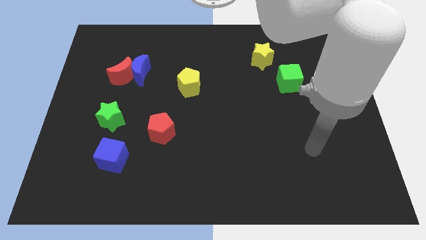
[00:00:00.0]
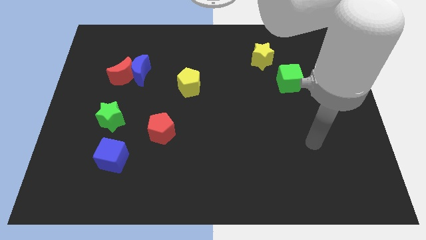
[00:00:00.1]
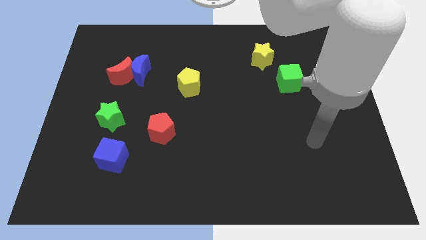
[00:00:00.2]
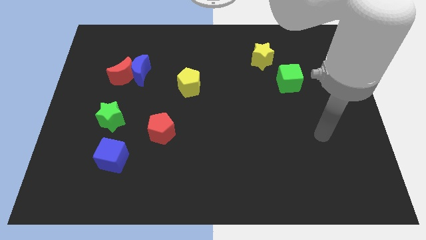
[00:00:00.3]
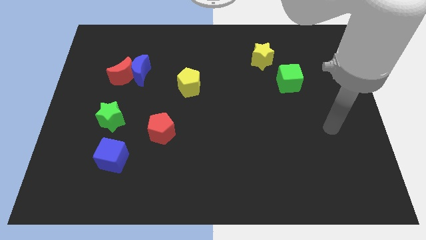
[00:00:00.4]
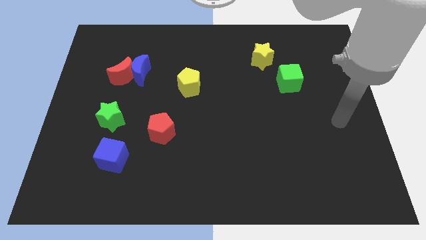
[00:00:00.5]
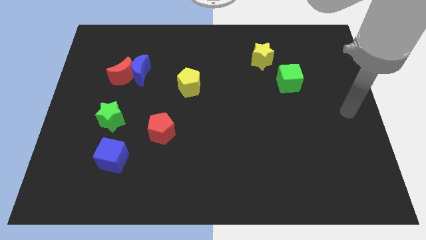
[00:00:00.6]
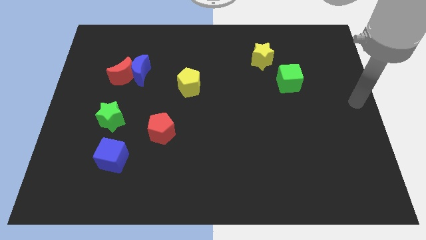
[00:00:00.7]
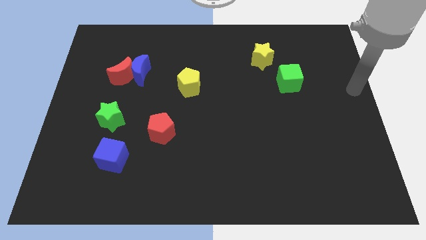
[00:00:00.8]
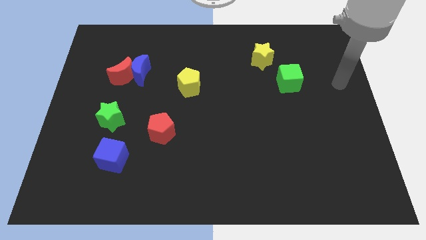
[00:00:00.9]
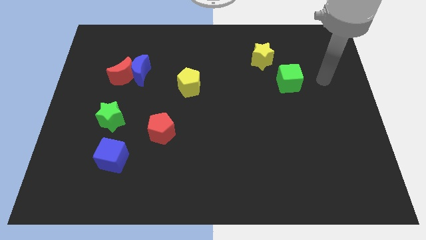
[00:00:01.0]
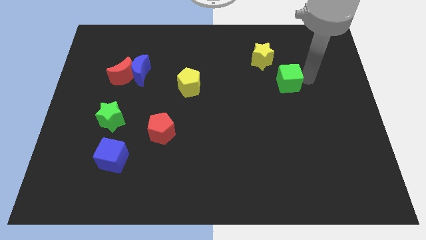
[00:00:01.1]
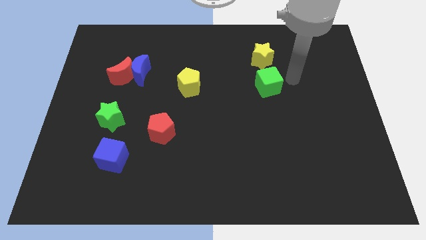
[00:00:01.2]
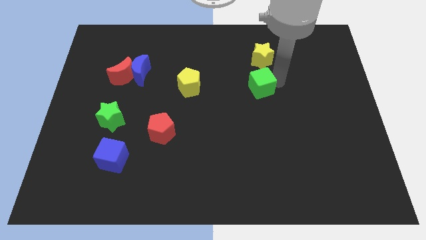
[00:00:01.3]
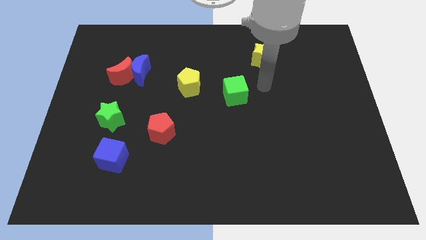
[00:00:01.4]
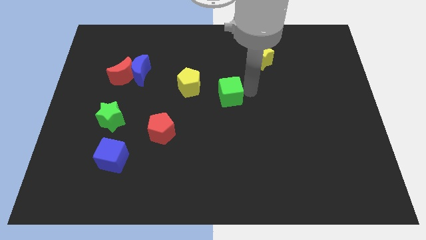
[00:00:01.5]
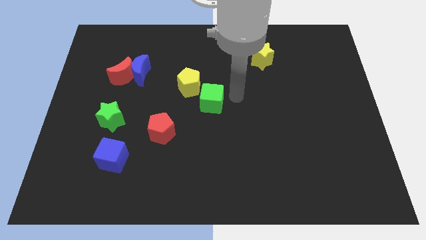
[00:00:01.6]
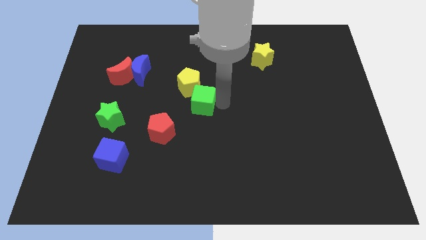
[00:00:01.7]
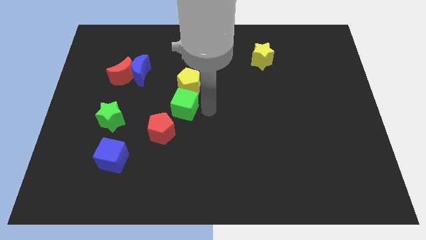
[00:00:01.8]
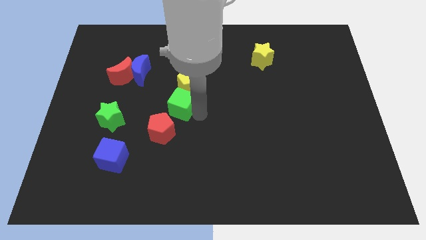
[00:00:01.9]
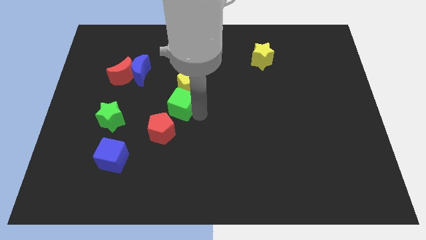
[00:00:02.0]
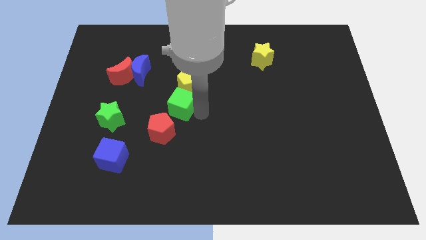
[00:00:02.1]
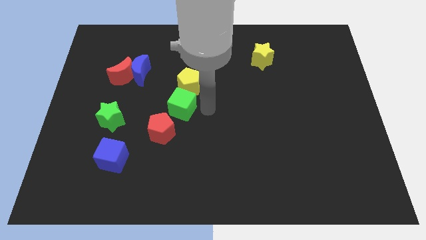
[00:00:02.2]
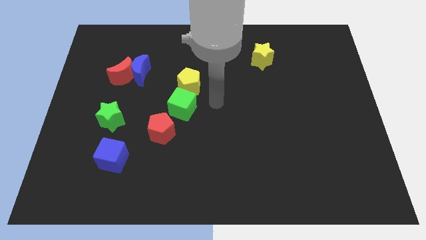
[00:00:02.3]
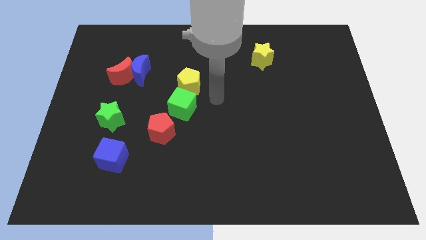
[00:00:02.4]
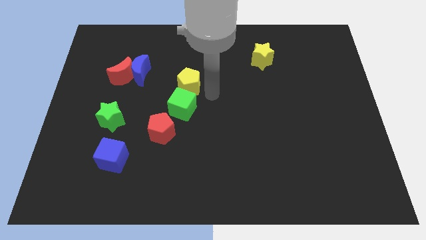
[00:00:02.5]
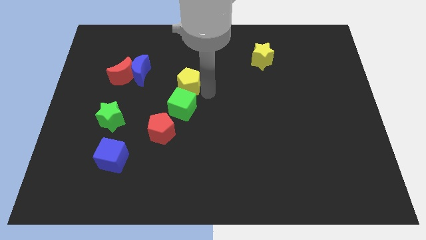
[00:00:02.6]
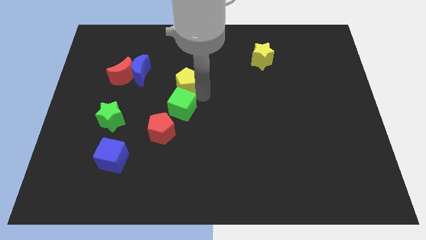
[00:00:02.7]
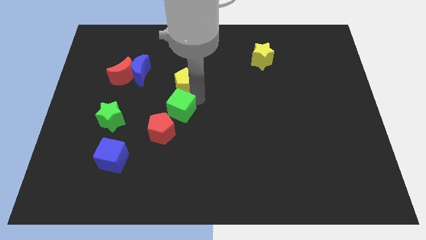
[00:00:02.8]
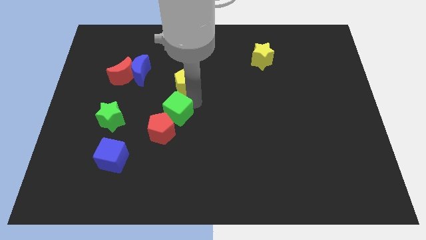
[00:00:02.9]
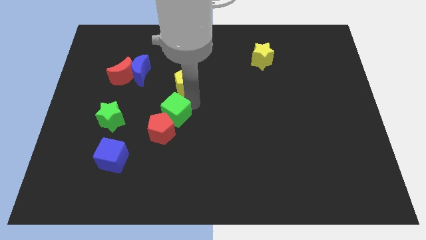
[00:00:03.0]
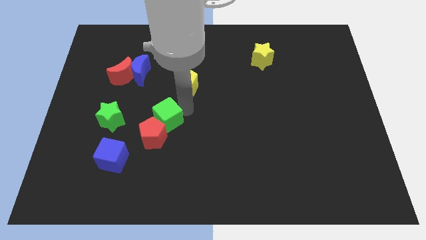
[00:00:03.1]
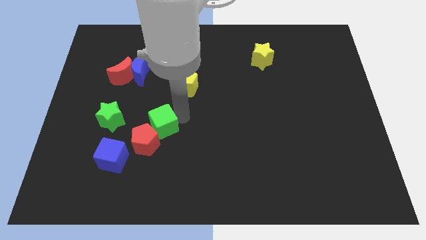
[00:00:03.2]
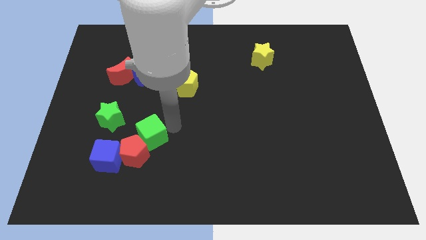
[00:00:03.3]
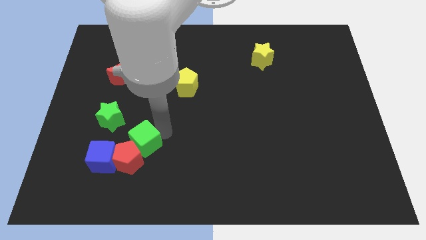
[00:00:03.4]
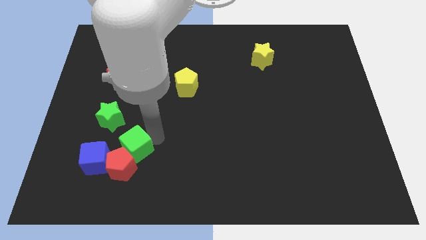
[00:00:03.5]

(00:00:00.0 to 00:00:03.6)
move the green cube into the red pentagon

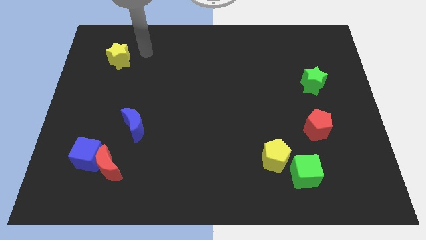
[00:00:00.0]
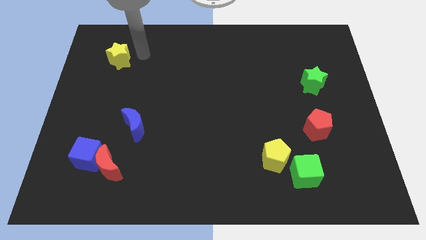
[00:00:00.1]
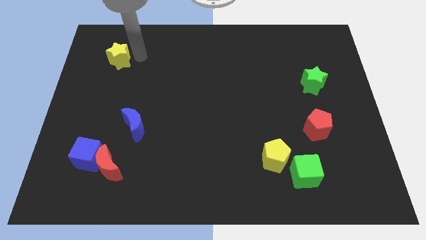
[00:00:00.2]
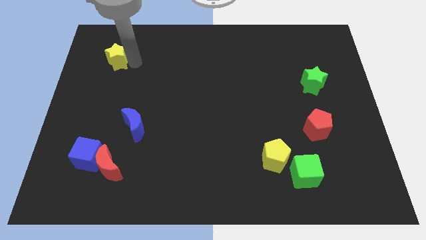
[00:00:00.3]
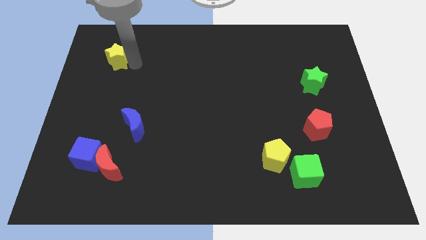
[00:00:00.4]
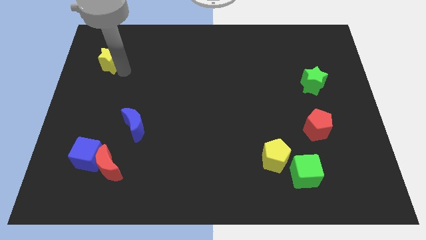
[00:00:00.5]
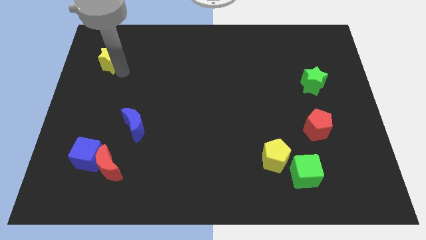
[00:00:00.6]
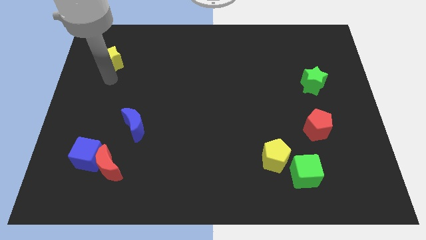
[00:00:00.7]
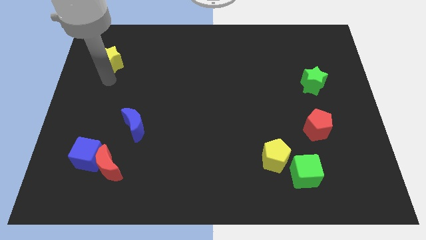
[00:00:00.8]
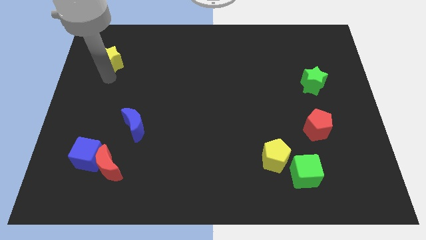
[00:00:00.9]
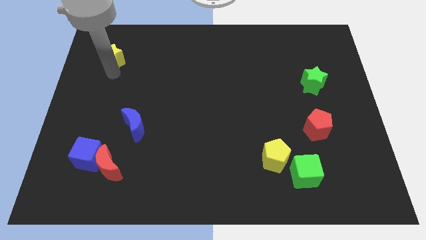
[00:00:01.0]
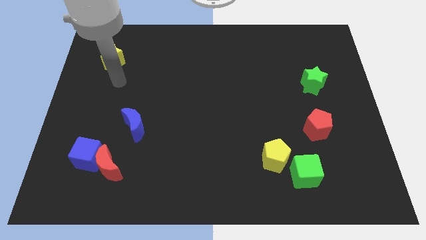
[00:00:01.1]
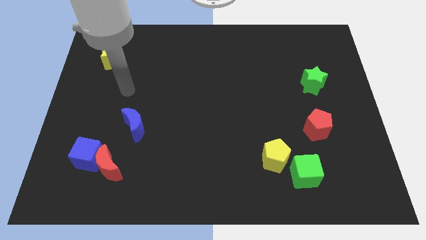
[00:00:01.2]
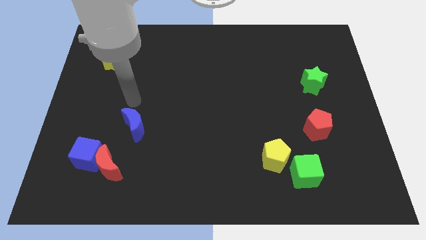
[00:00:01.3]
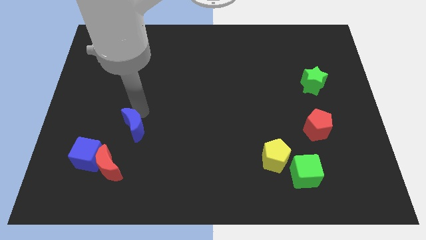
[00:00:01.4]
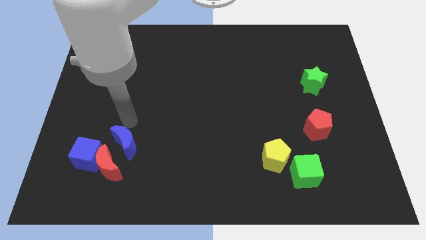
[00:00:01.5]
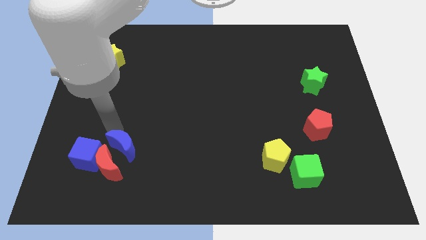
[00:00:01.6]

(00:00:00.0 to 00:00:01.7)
push blue moon above the red moon

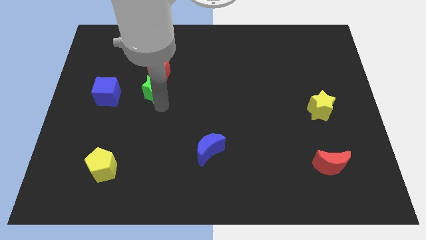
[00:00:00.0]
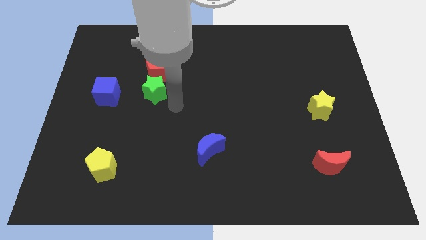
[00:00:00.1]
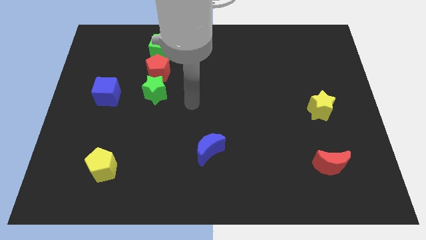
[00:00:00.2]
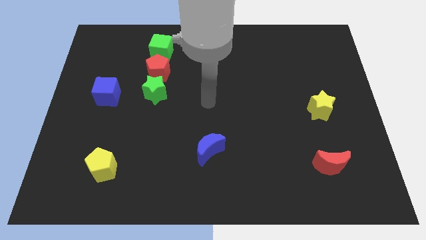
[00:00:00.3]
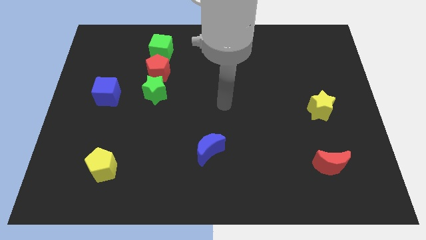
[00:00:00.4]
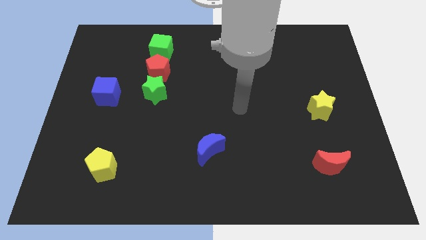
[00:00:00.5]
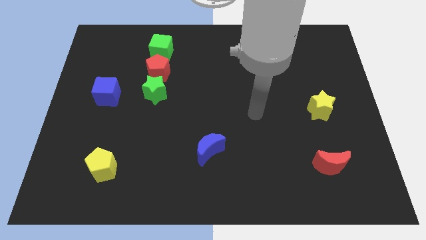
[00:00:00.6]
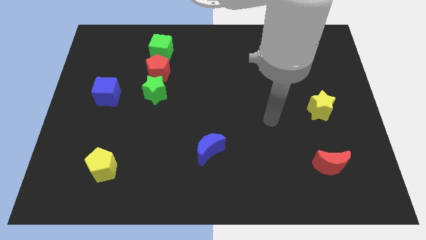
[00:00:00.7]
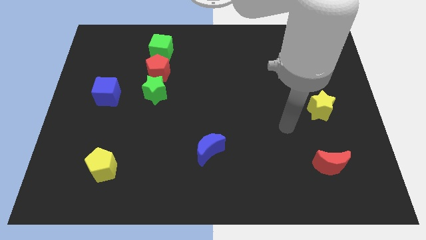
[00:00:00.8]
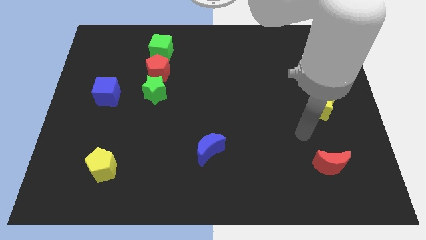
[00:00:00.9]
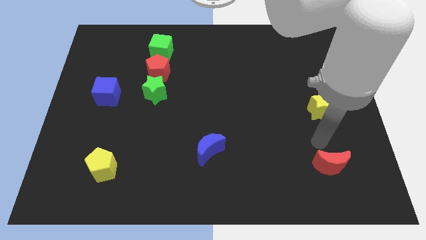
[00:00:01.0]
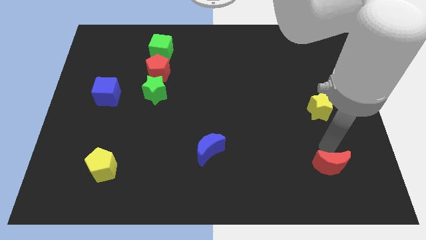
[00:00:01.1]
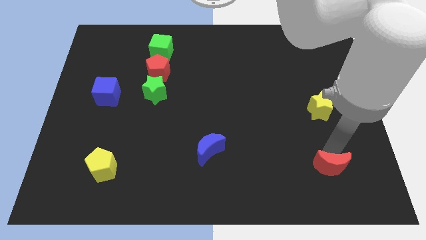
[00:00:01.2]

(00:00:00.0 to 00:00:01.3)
place your arm to the top of red moon

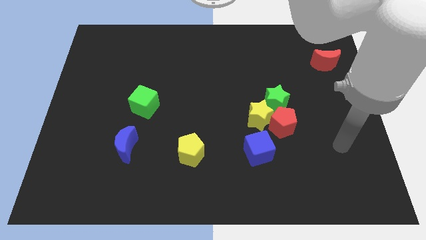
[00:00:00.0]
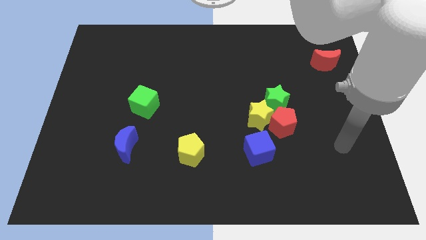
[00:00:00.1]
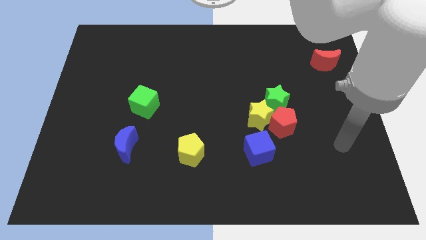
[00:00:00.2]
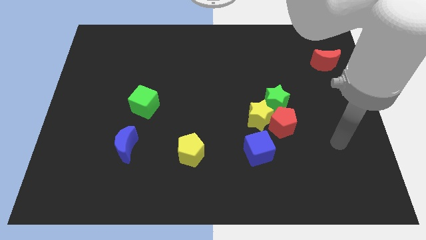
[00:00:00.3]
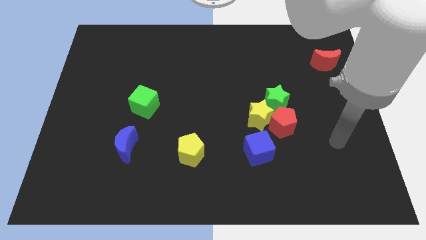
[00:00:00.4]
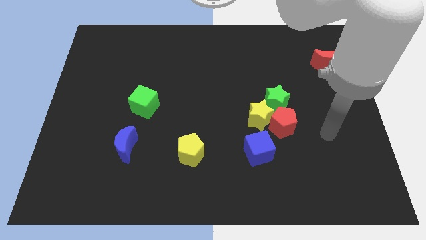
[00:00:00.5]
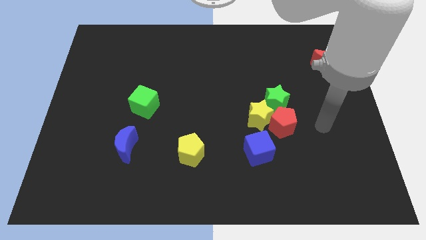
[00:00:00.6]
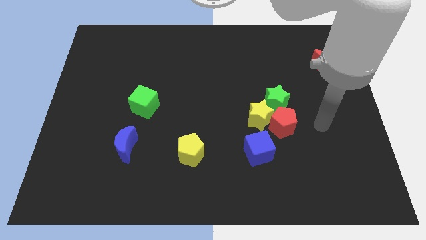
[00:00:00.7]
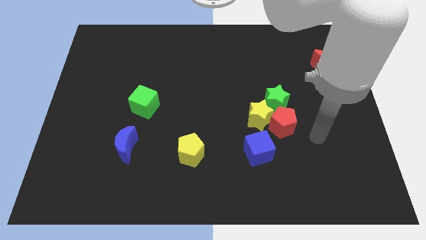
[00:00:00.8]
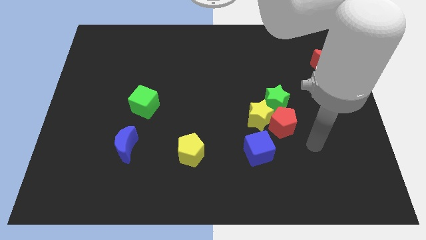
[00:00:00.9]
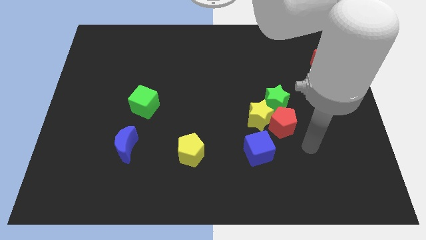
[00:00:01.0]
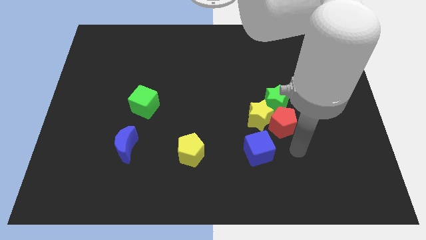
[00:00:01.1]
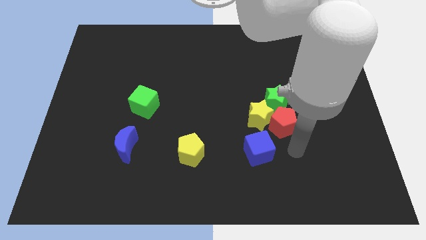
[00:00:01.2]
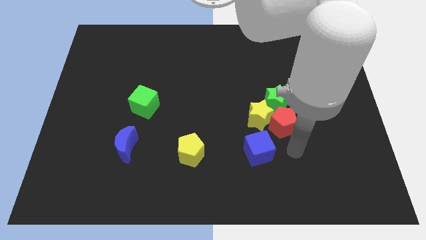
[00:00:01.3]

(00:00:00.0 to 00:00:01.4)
move the arm to the right side of the blue cube

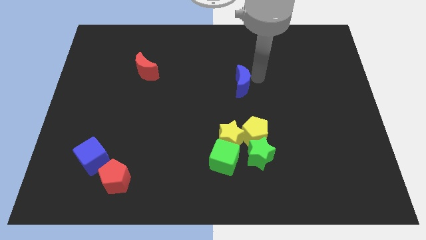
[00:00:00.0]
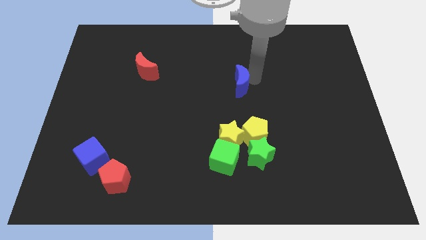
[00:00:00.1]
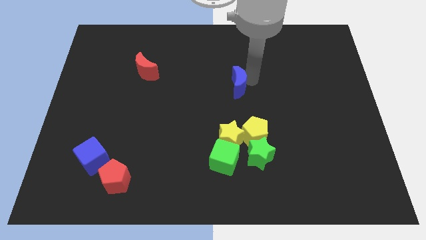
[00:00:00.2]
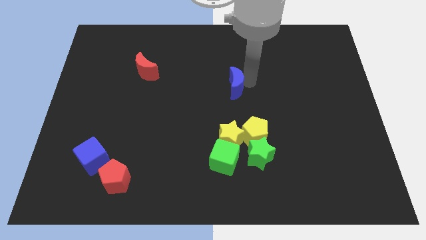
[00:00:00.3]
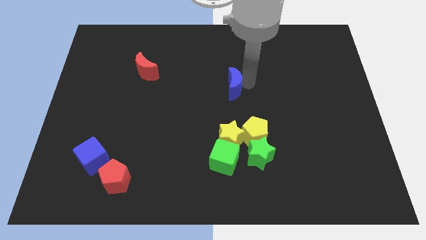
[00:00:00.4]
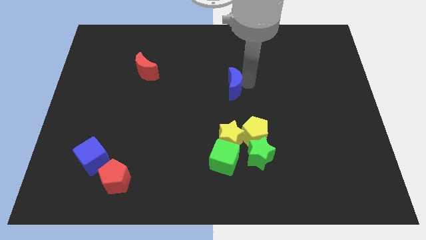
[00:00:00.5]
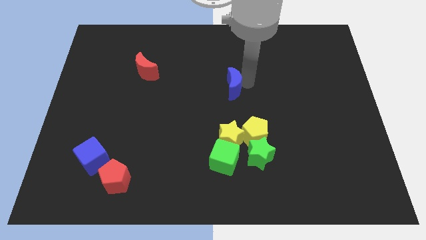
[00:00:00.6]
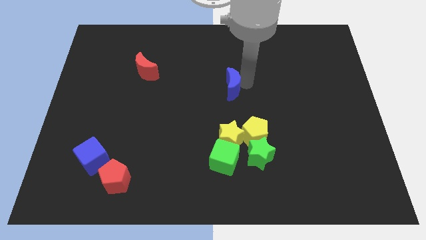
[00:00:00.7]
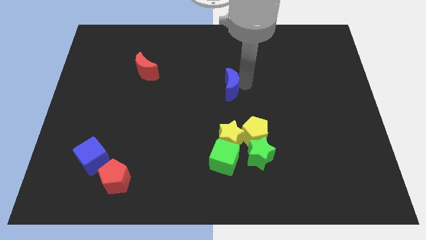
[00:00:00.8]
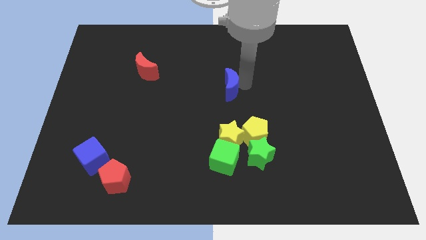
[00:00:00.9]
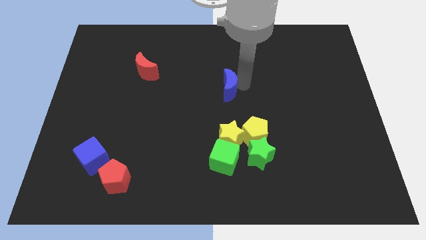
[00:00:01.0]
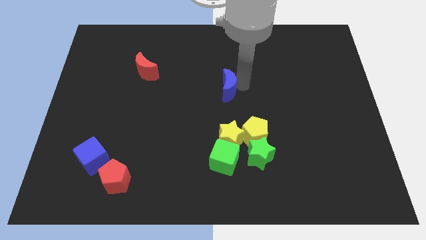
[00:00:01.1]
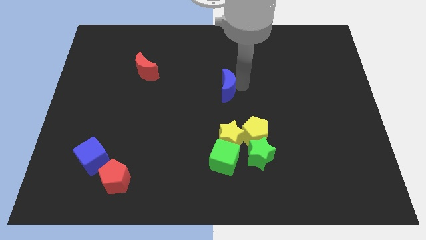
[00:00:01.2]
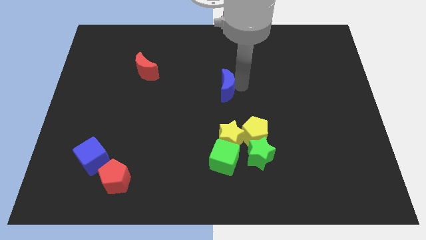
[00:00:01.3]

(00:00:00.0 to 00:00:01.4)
move the blue crescent to the center of the board
